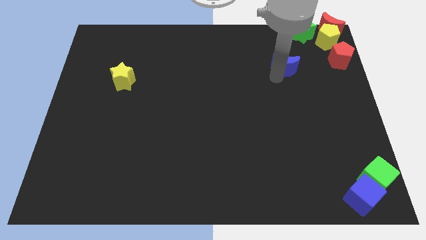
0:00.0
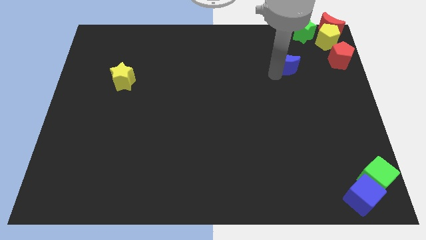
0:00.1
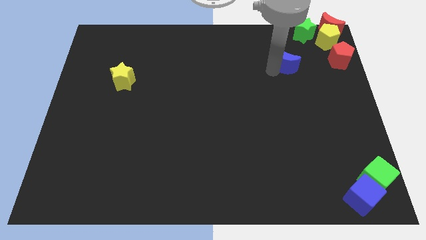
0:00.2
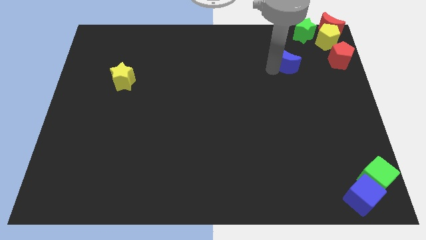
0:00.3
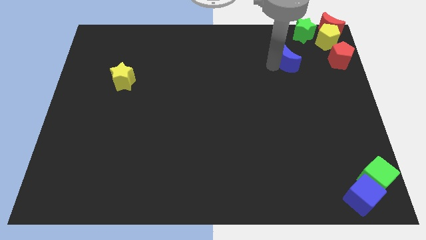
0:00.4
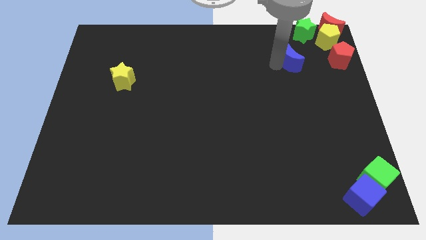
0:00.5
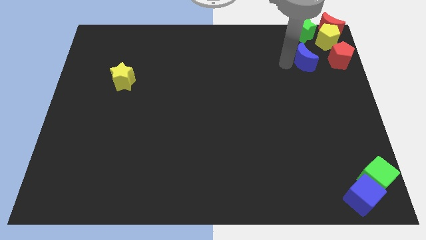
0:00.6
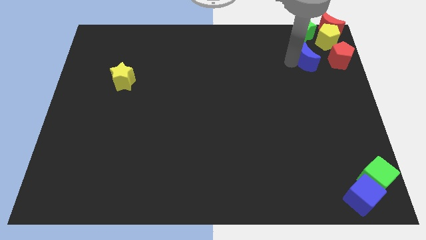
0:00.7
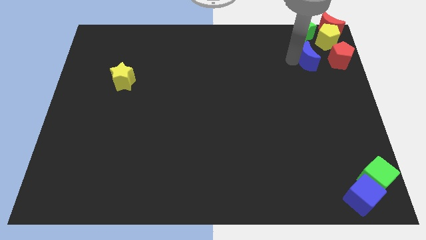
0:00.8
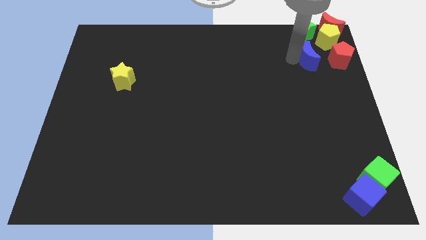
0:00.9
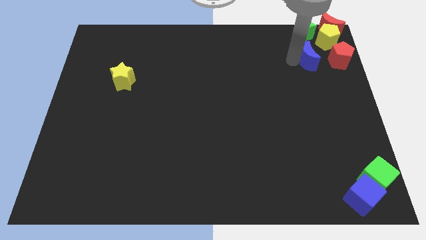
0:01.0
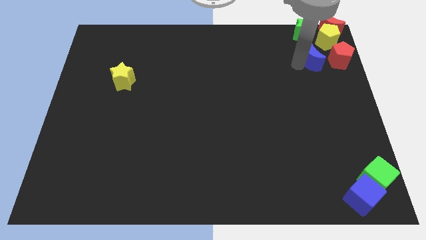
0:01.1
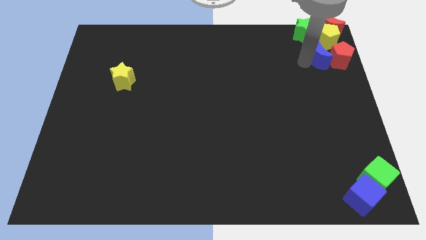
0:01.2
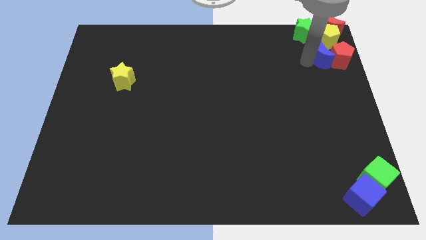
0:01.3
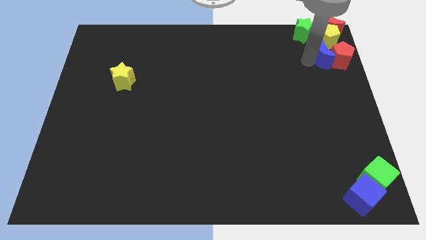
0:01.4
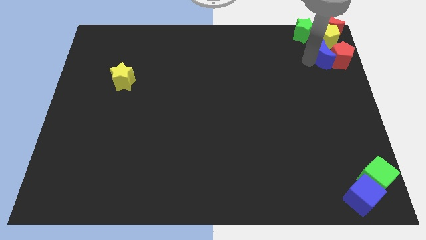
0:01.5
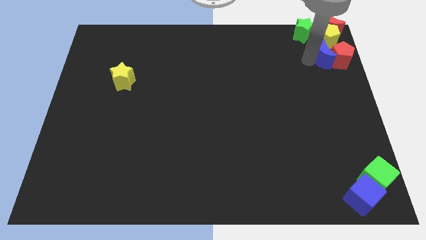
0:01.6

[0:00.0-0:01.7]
push the blue crescent to the left of the red crescent

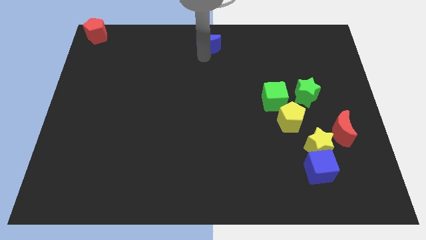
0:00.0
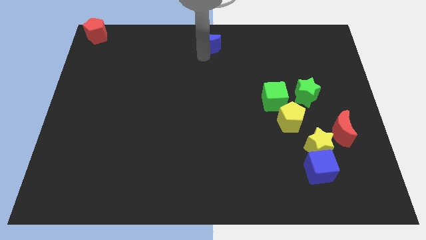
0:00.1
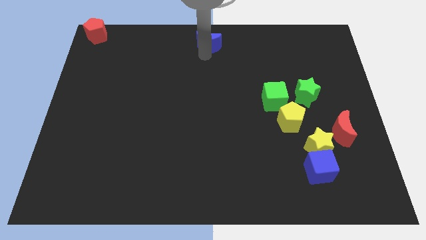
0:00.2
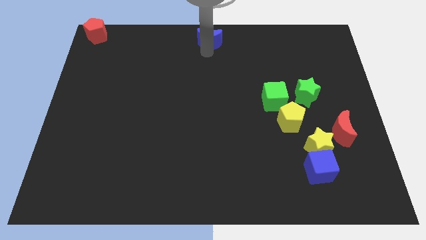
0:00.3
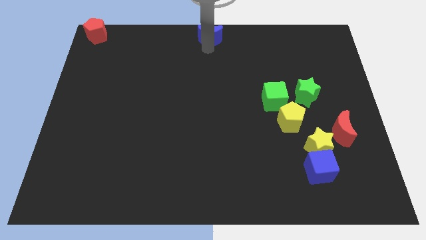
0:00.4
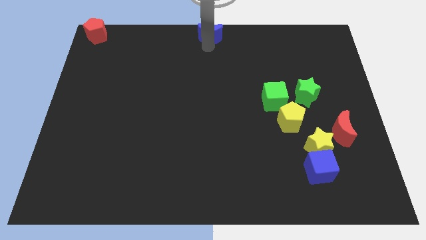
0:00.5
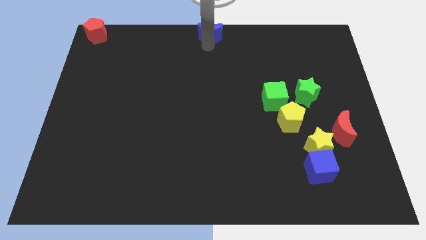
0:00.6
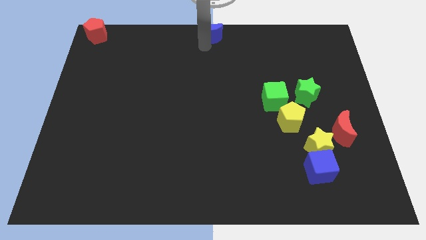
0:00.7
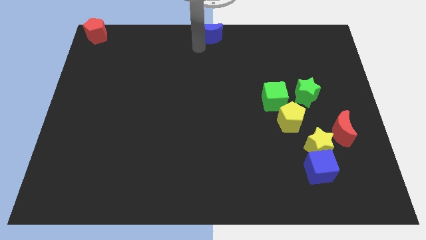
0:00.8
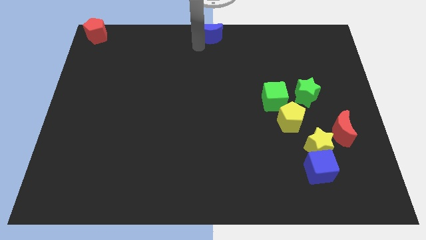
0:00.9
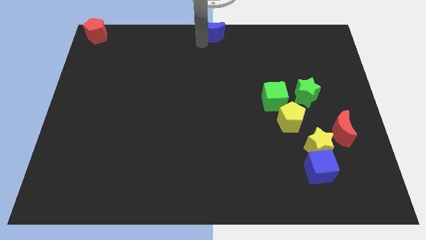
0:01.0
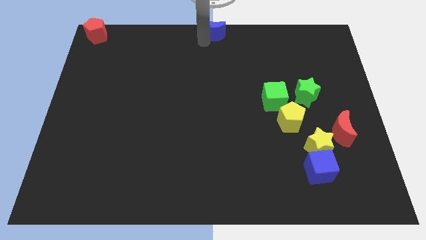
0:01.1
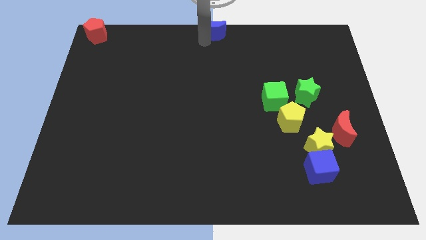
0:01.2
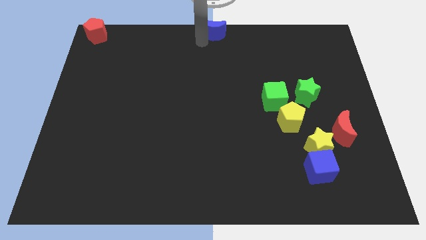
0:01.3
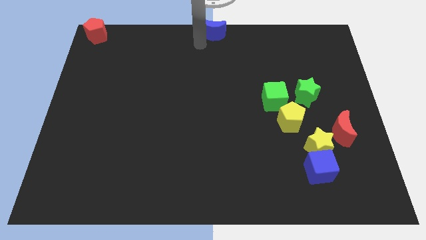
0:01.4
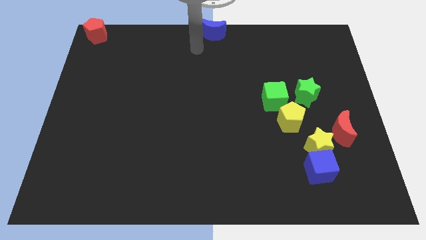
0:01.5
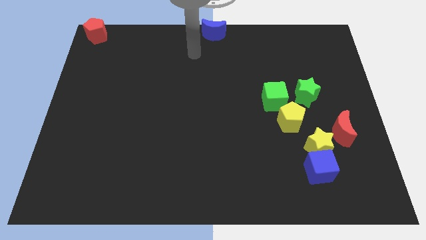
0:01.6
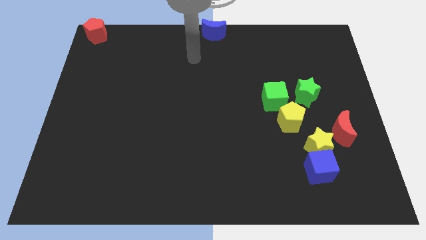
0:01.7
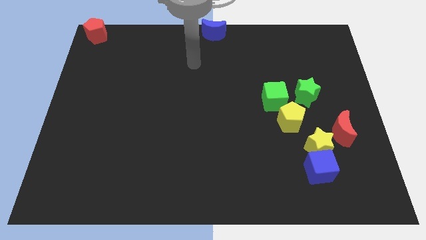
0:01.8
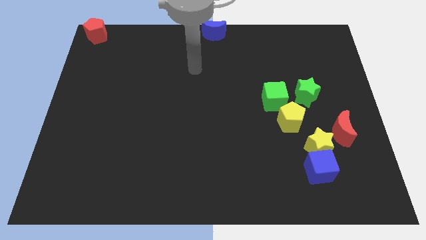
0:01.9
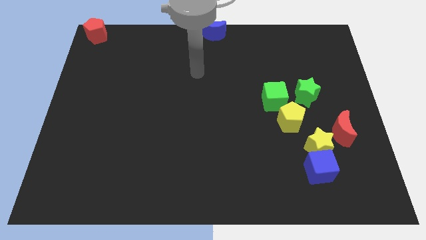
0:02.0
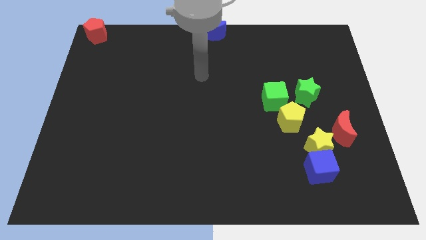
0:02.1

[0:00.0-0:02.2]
move the blue moon to the top middle

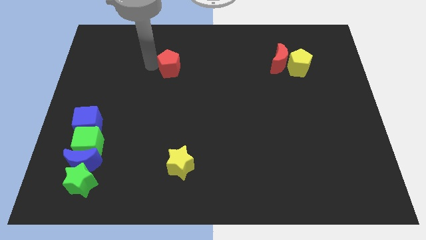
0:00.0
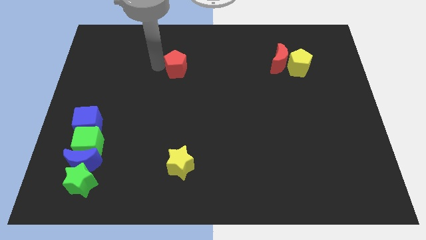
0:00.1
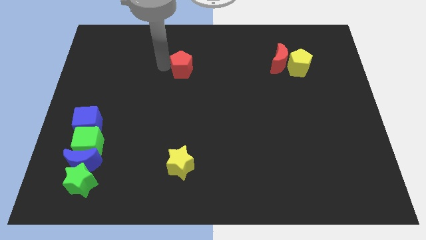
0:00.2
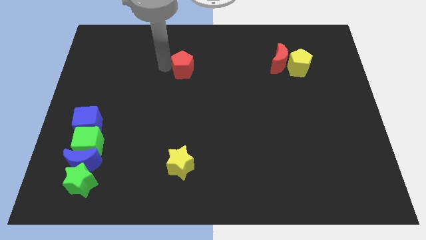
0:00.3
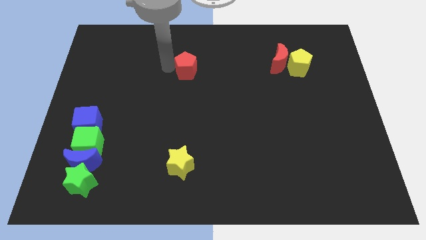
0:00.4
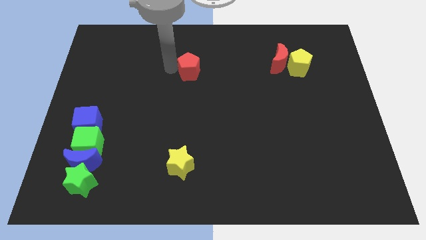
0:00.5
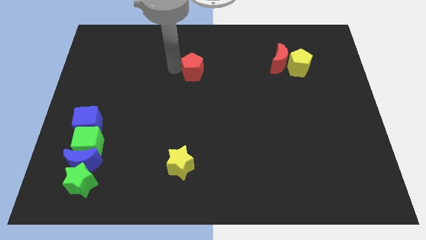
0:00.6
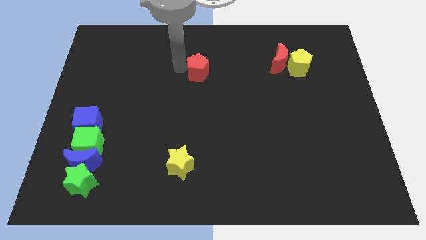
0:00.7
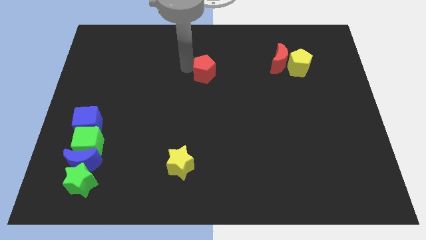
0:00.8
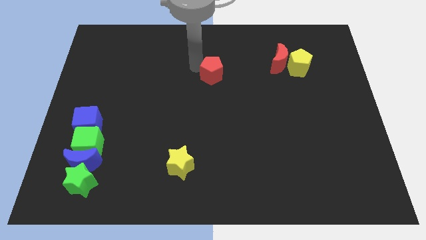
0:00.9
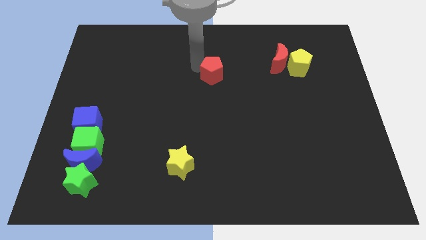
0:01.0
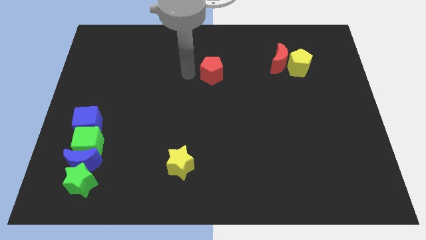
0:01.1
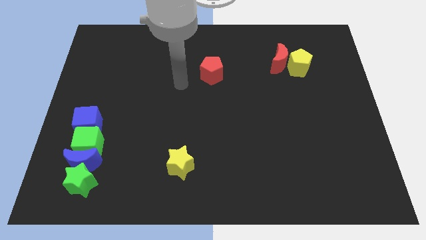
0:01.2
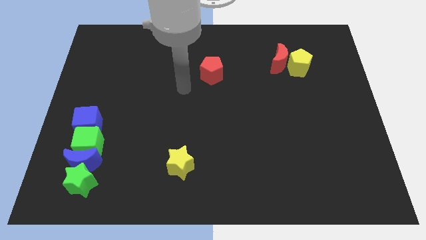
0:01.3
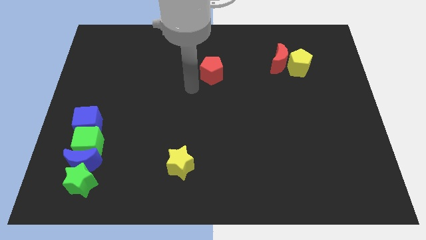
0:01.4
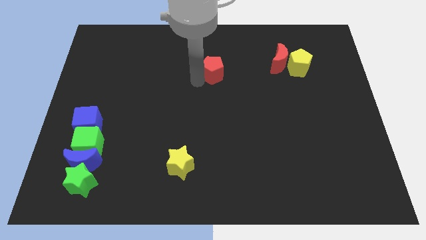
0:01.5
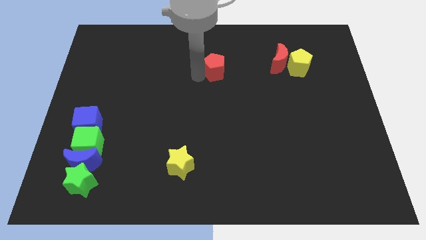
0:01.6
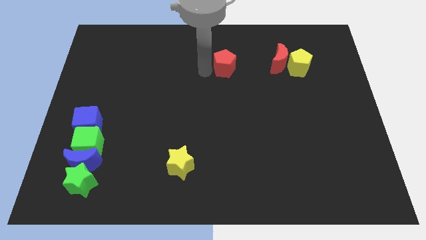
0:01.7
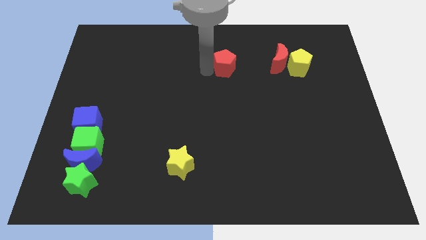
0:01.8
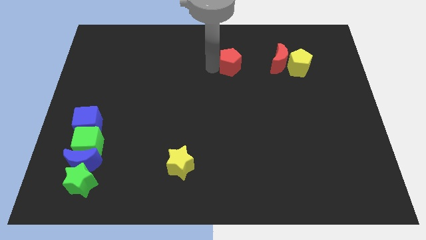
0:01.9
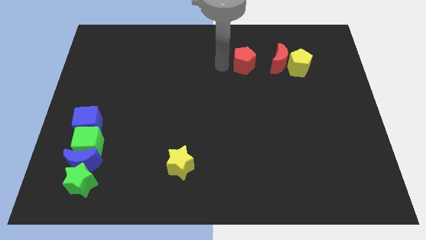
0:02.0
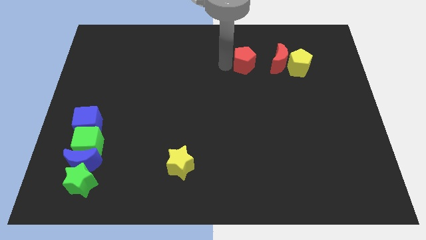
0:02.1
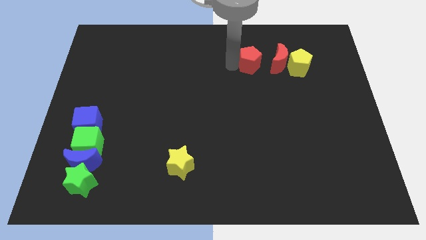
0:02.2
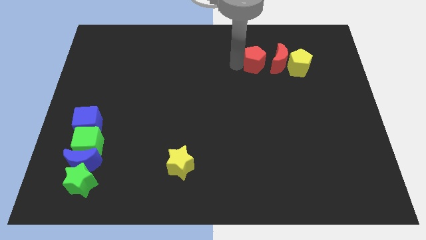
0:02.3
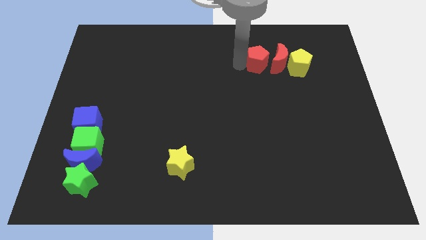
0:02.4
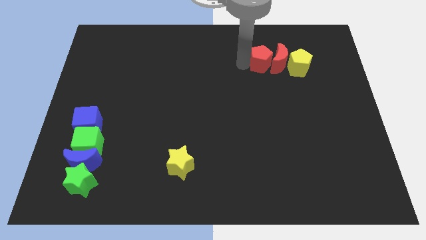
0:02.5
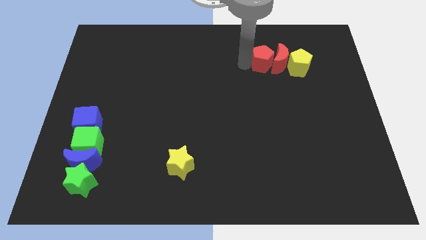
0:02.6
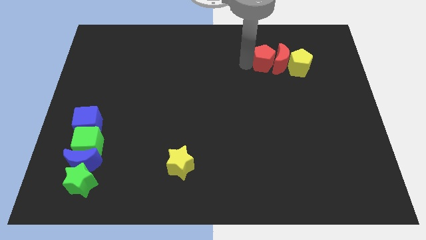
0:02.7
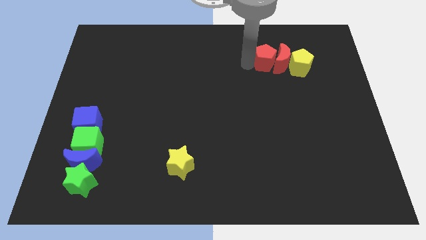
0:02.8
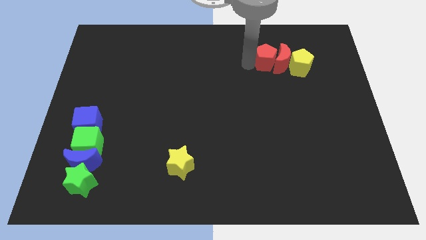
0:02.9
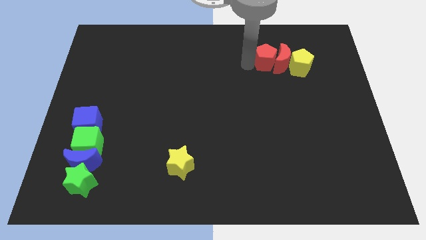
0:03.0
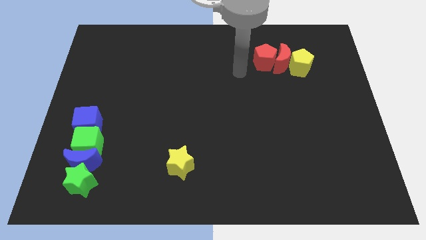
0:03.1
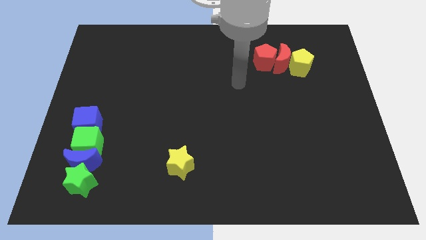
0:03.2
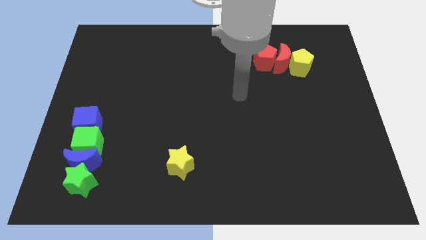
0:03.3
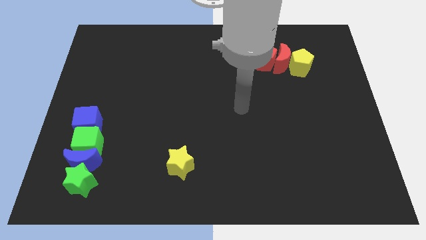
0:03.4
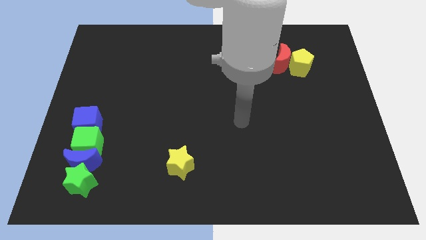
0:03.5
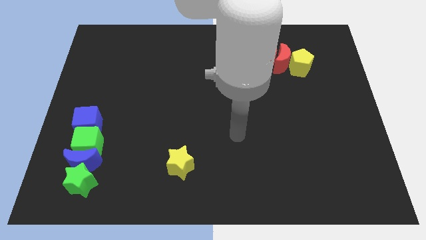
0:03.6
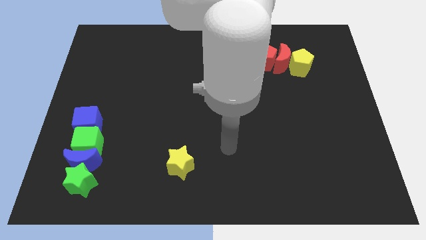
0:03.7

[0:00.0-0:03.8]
push the red pentagon into the red moon

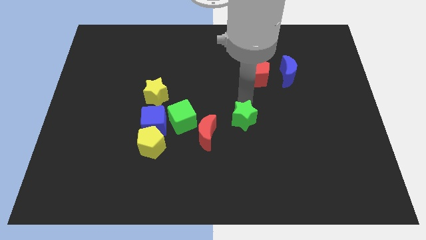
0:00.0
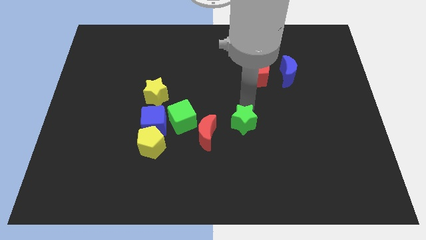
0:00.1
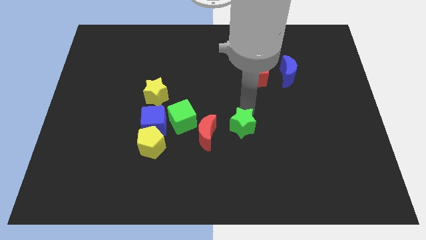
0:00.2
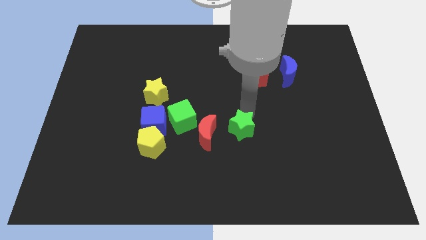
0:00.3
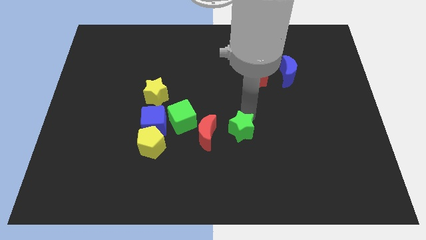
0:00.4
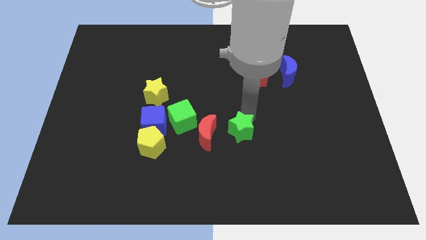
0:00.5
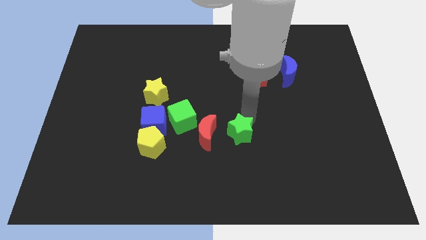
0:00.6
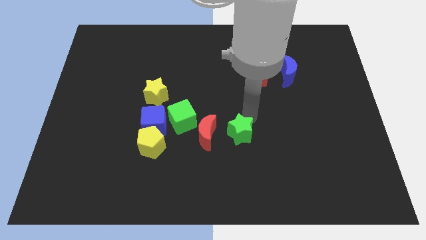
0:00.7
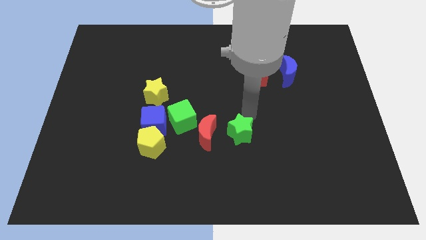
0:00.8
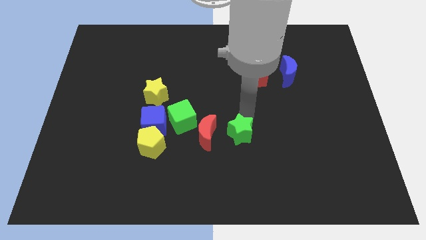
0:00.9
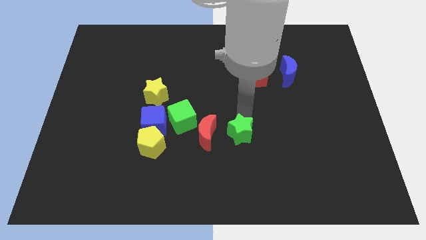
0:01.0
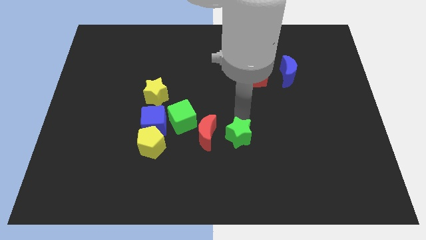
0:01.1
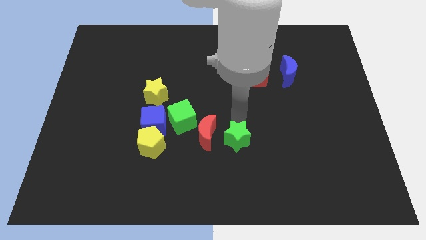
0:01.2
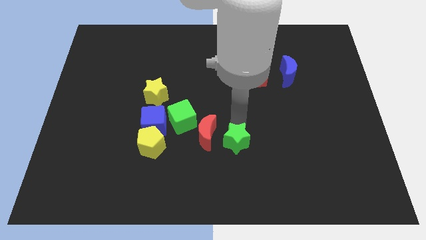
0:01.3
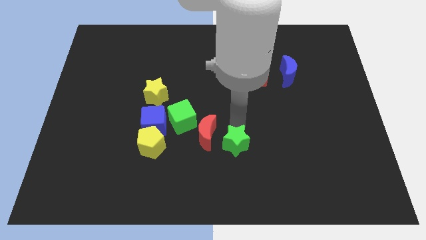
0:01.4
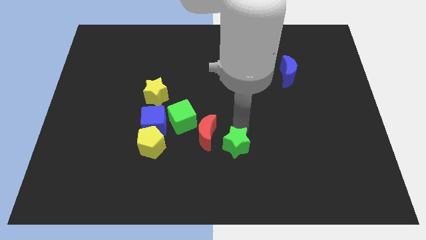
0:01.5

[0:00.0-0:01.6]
put the green star parallel right to the red crescent
